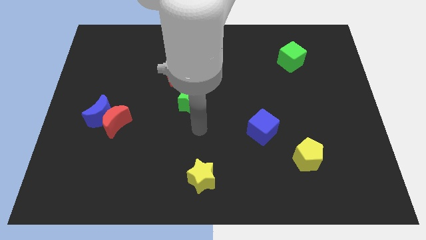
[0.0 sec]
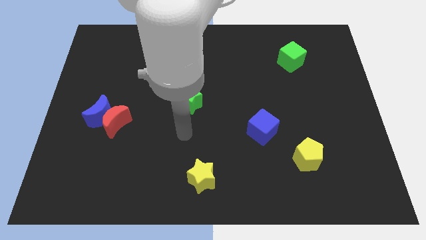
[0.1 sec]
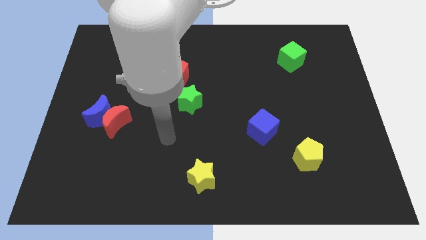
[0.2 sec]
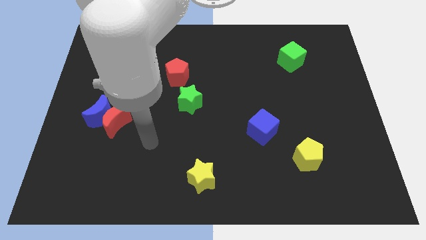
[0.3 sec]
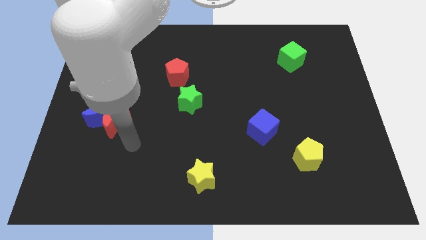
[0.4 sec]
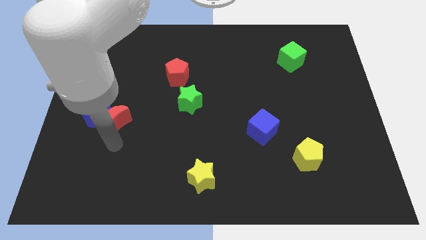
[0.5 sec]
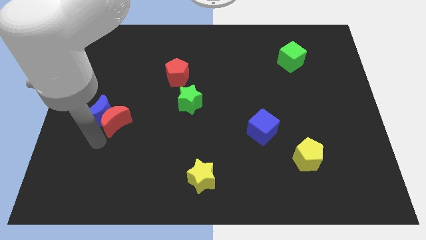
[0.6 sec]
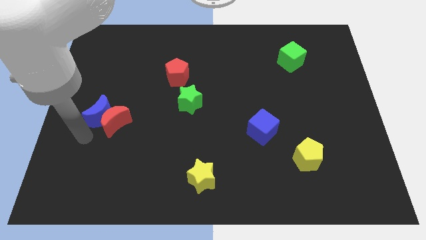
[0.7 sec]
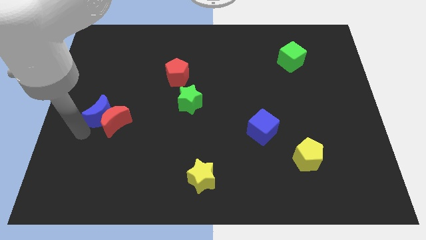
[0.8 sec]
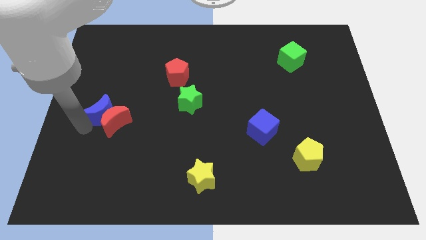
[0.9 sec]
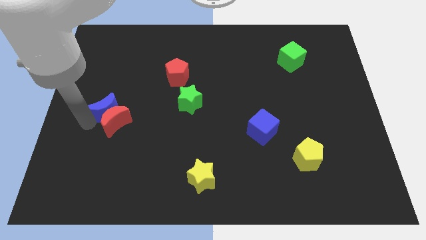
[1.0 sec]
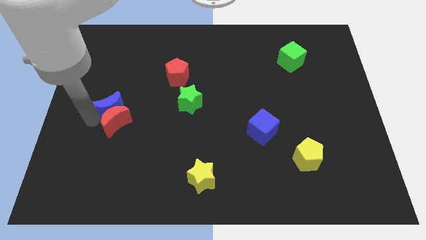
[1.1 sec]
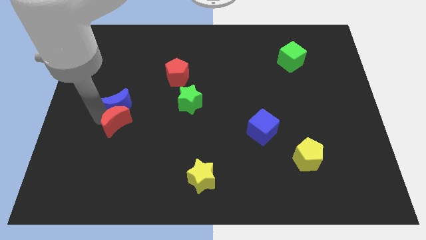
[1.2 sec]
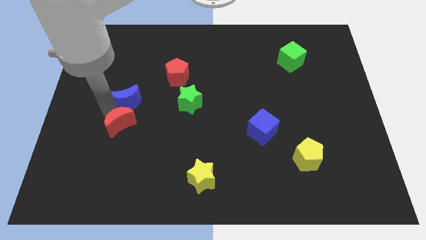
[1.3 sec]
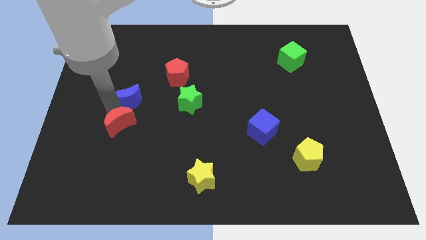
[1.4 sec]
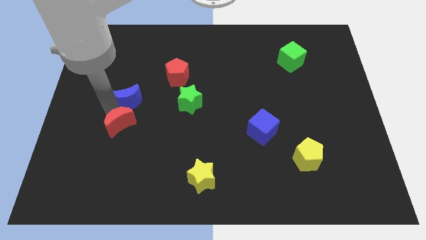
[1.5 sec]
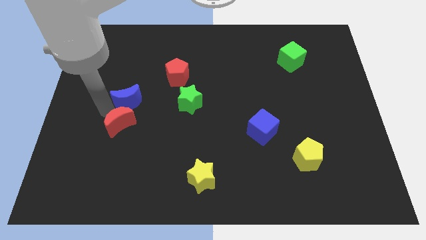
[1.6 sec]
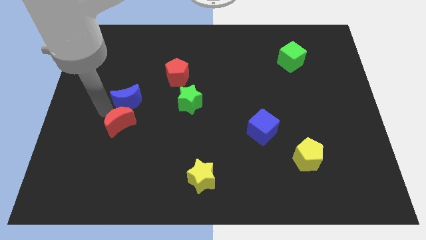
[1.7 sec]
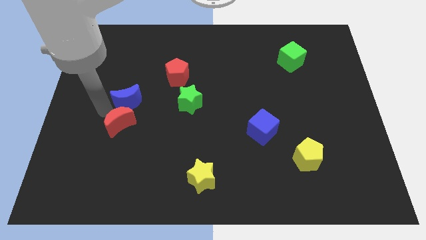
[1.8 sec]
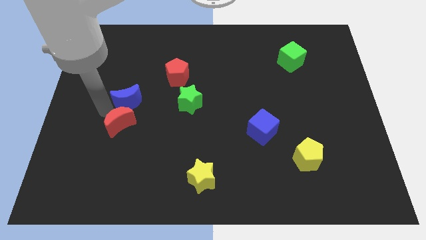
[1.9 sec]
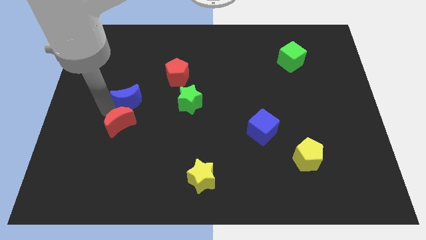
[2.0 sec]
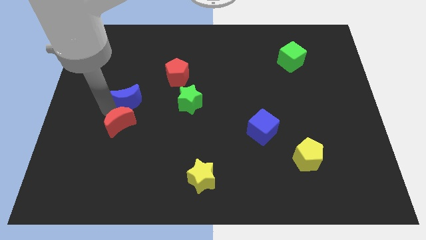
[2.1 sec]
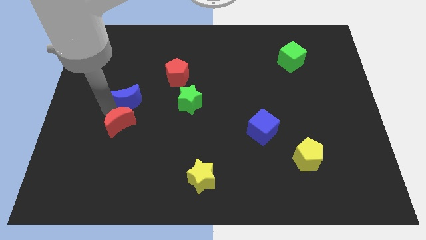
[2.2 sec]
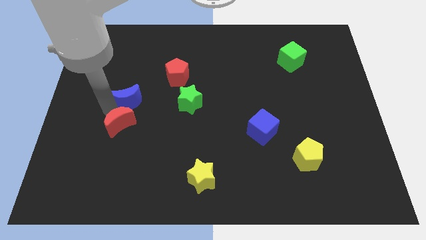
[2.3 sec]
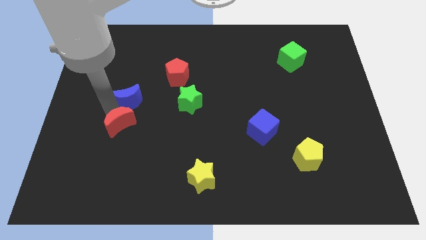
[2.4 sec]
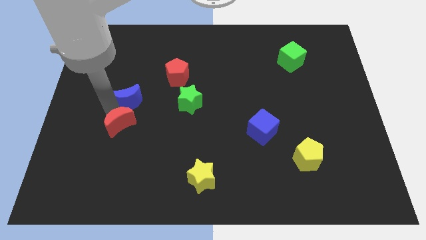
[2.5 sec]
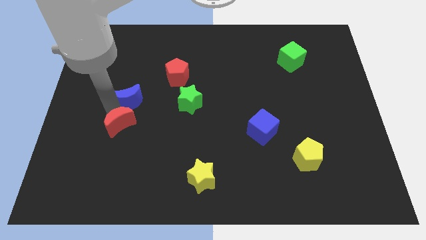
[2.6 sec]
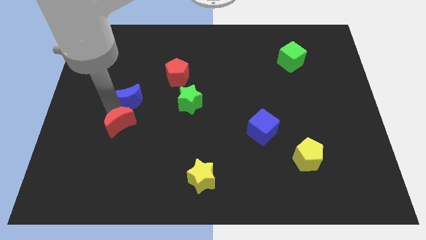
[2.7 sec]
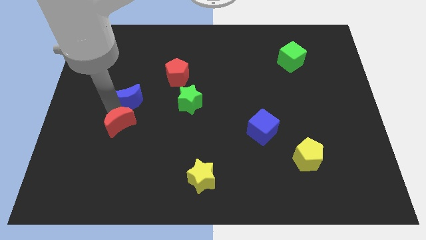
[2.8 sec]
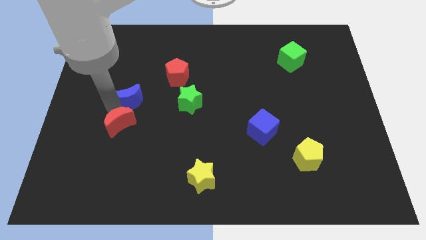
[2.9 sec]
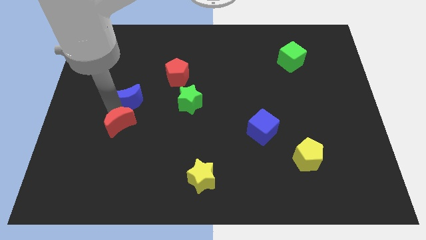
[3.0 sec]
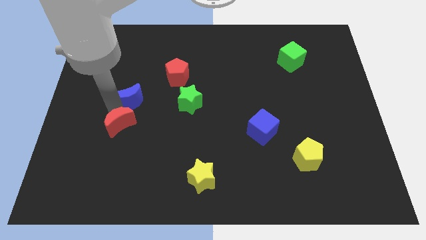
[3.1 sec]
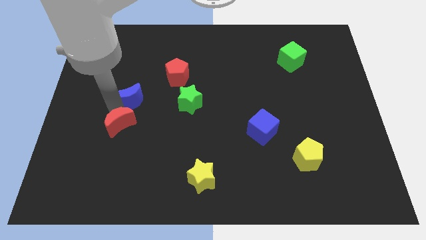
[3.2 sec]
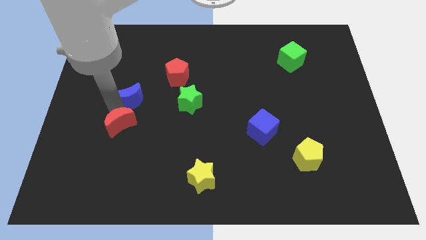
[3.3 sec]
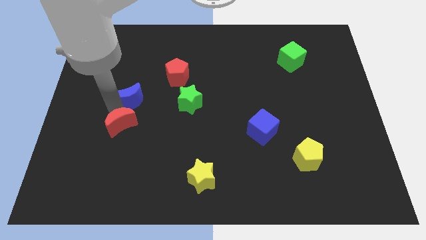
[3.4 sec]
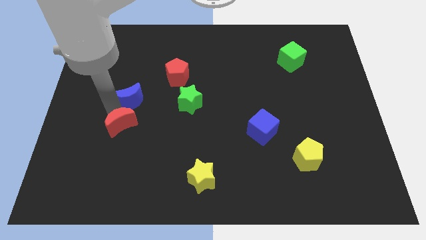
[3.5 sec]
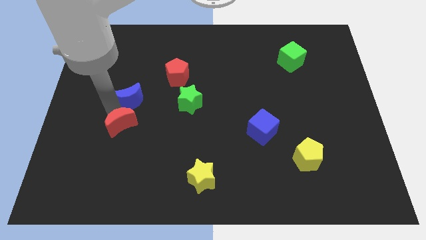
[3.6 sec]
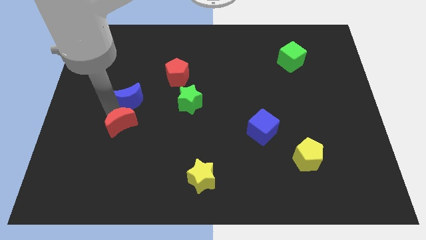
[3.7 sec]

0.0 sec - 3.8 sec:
put the blue moon above the red moon

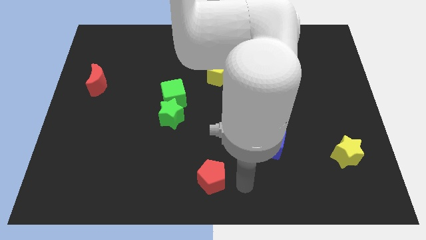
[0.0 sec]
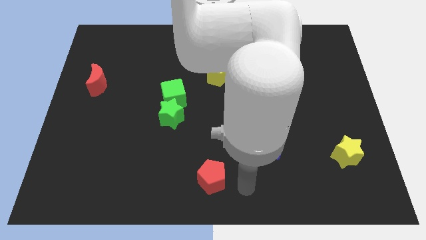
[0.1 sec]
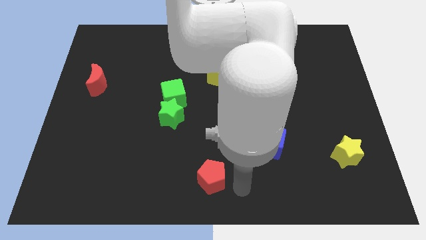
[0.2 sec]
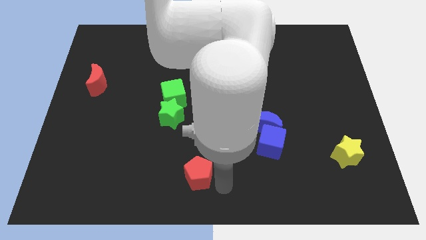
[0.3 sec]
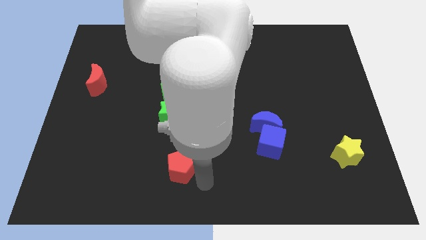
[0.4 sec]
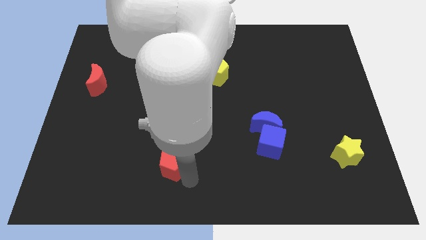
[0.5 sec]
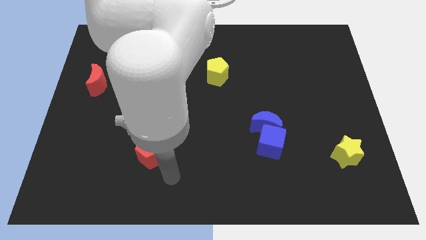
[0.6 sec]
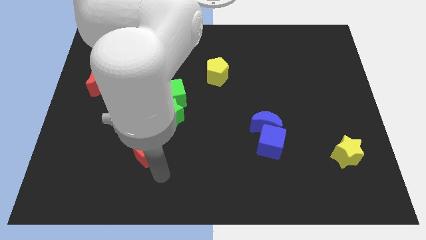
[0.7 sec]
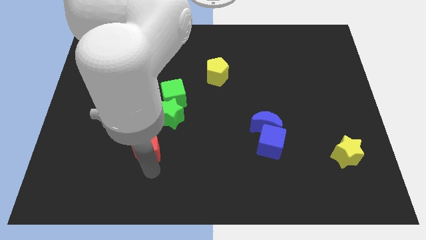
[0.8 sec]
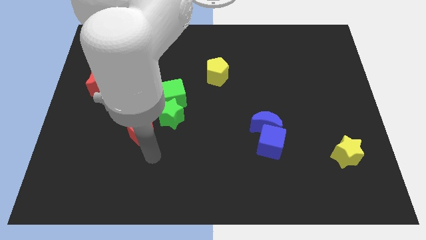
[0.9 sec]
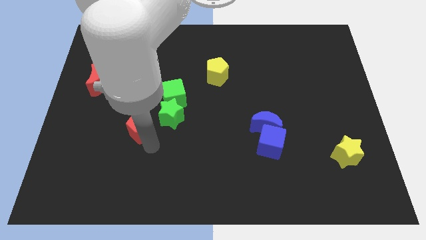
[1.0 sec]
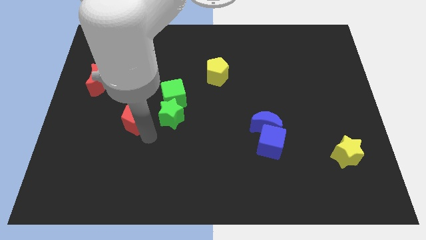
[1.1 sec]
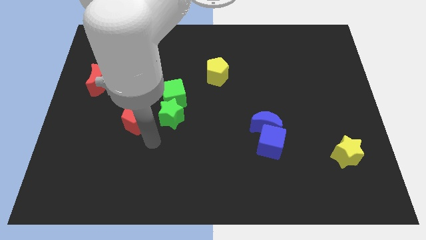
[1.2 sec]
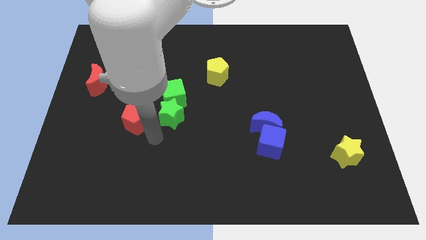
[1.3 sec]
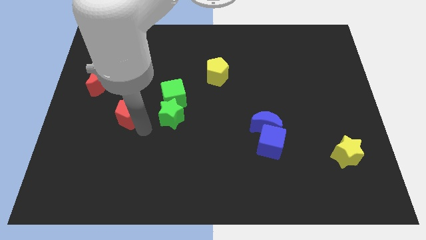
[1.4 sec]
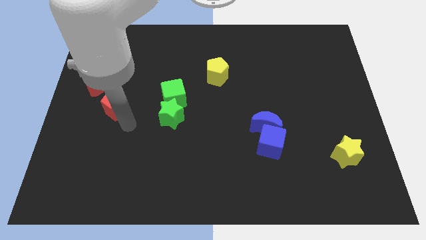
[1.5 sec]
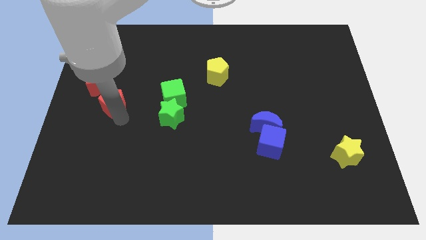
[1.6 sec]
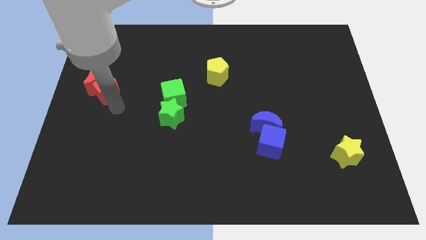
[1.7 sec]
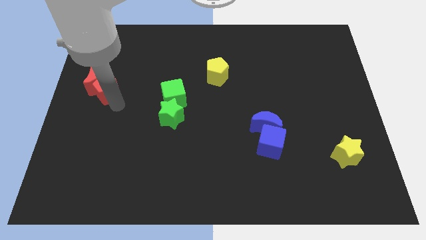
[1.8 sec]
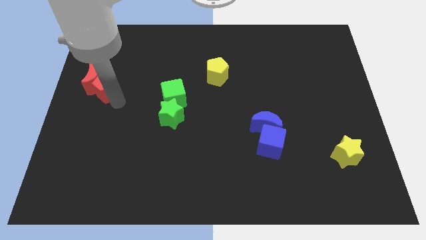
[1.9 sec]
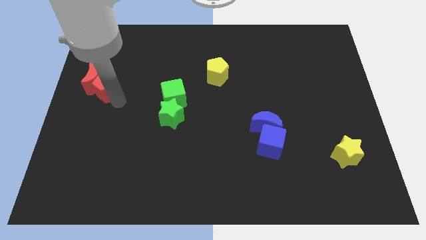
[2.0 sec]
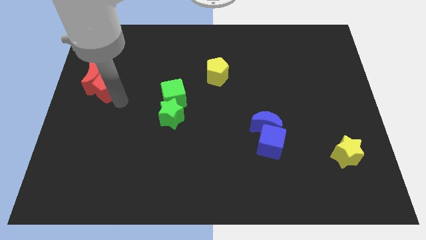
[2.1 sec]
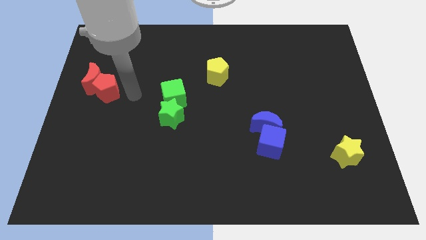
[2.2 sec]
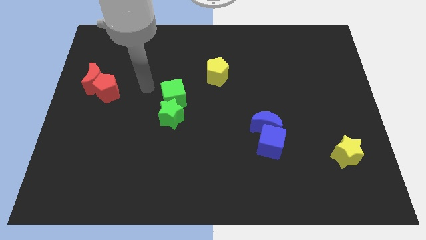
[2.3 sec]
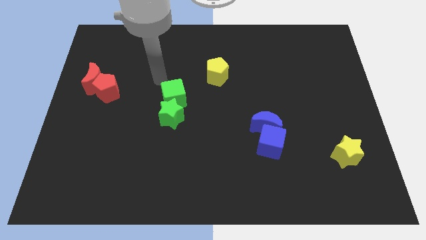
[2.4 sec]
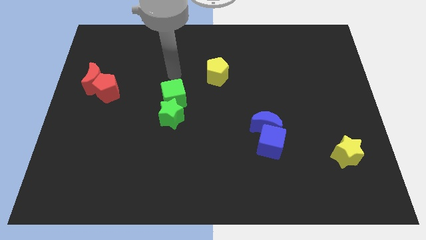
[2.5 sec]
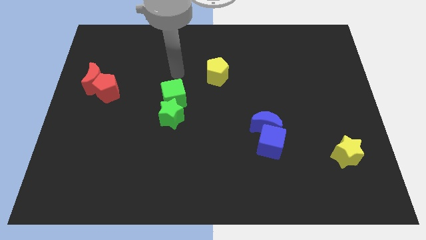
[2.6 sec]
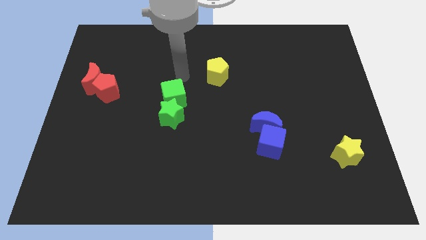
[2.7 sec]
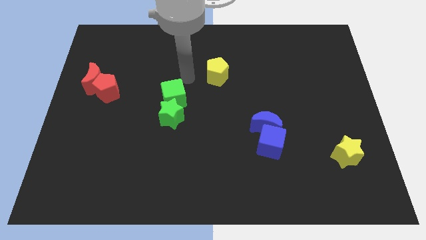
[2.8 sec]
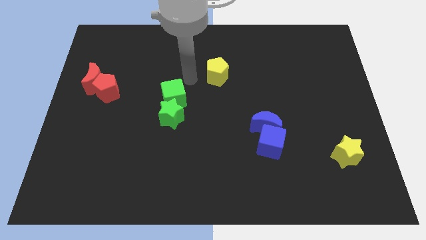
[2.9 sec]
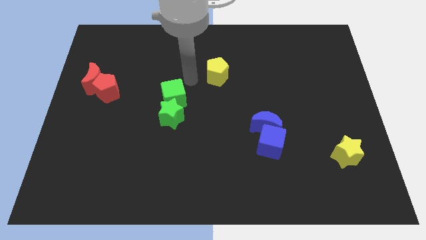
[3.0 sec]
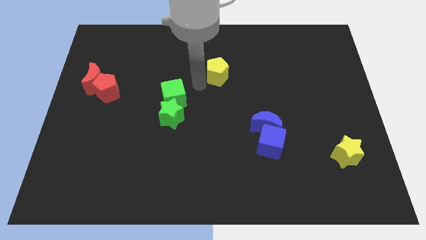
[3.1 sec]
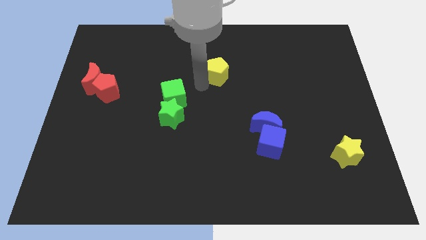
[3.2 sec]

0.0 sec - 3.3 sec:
push the bottom center red pentagon to top left red moon

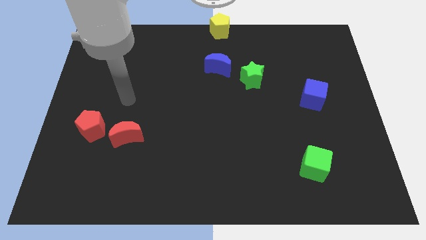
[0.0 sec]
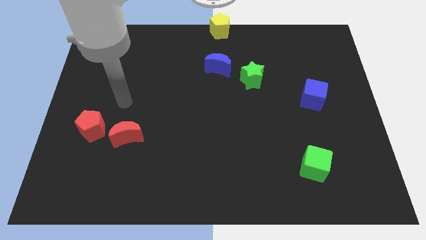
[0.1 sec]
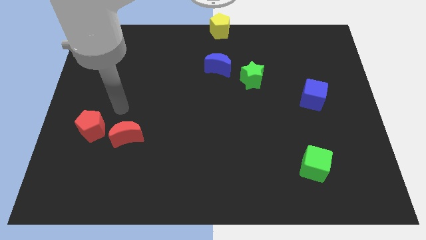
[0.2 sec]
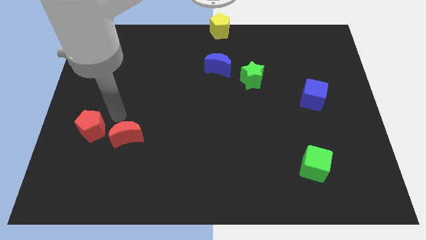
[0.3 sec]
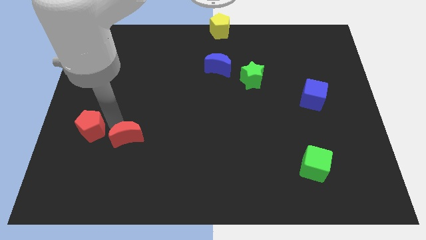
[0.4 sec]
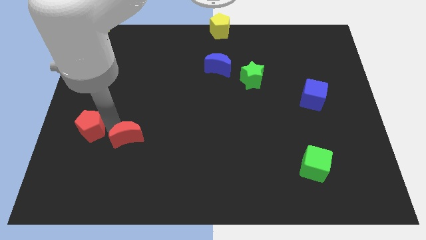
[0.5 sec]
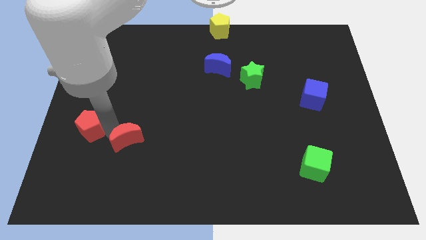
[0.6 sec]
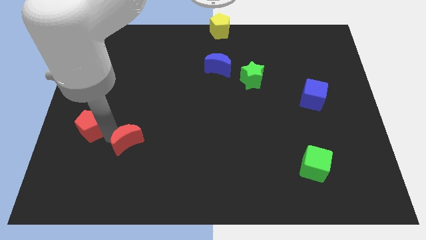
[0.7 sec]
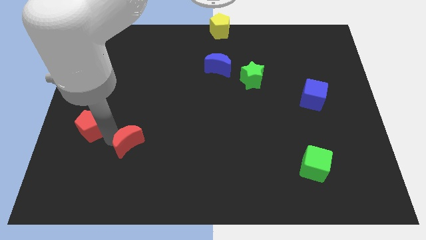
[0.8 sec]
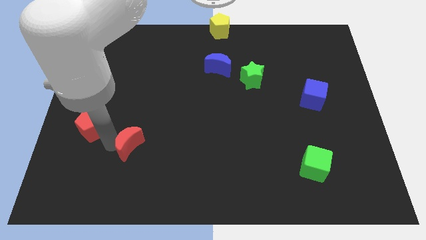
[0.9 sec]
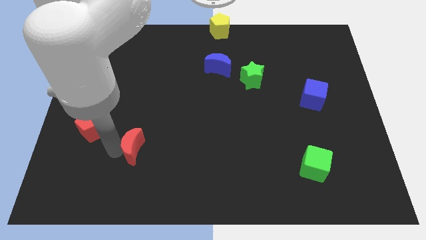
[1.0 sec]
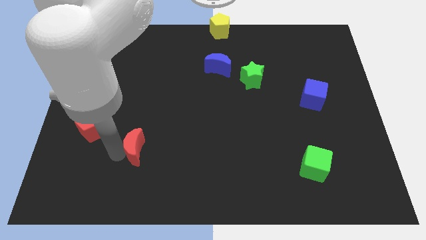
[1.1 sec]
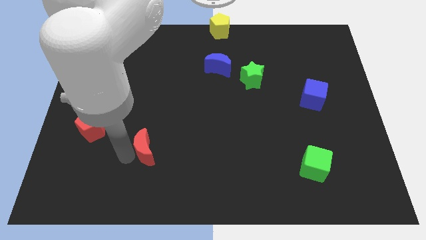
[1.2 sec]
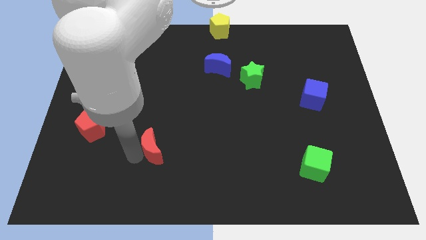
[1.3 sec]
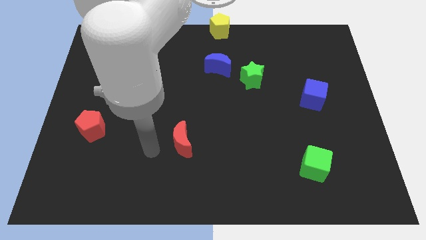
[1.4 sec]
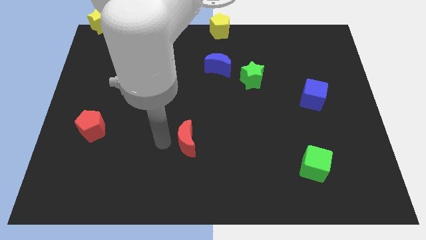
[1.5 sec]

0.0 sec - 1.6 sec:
rotate the red crescent to the right side

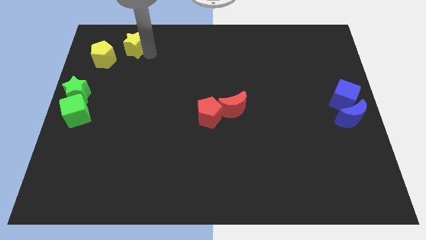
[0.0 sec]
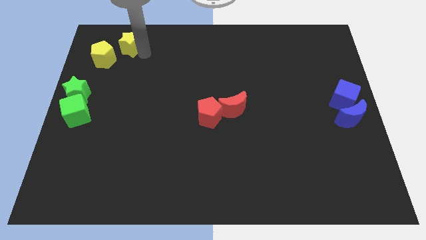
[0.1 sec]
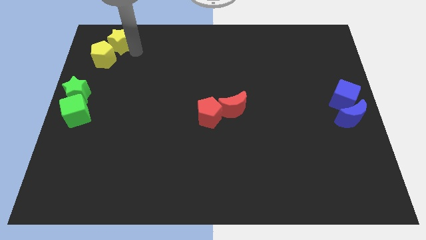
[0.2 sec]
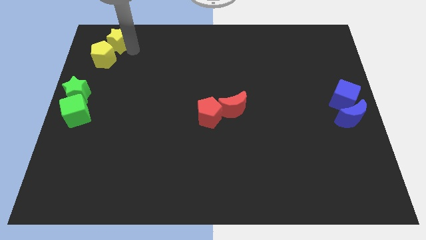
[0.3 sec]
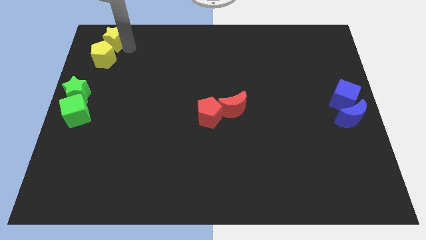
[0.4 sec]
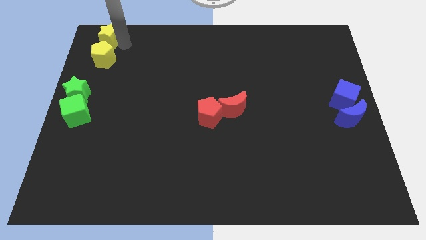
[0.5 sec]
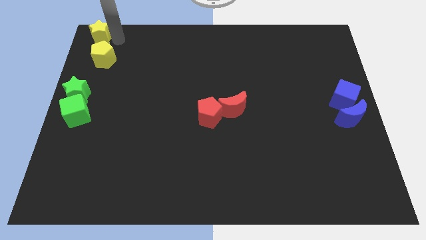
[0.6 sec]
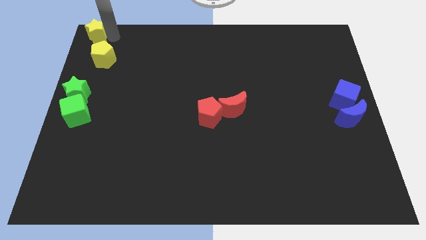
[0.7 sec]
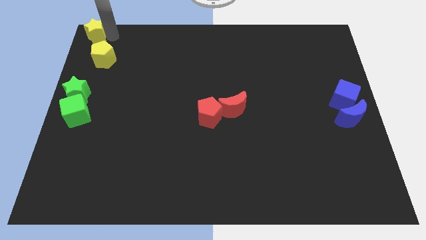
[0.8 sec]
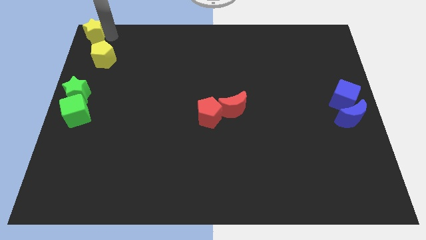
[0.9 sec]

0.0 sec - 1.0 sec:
place the yellow star above the yellow pentagon
